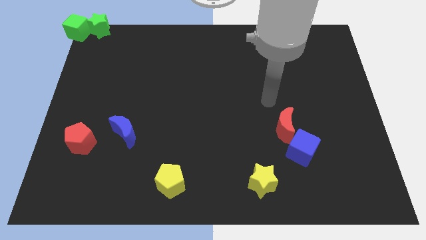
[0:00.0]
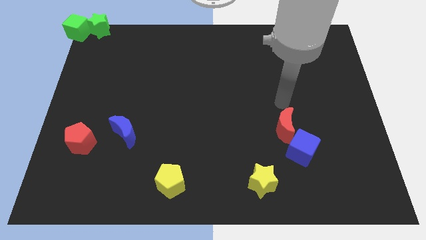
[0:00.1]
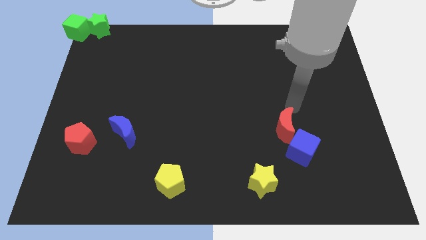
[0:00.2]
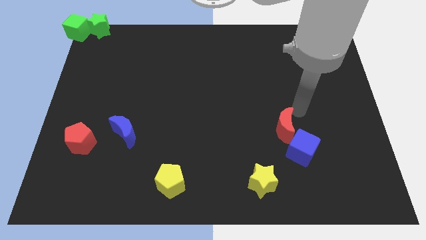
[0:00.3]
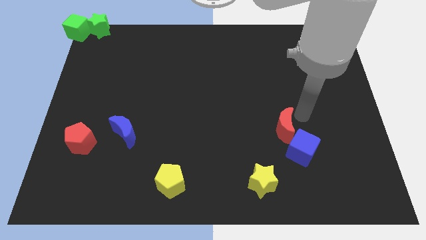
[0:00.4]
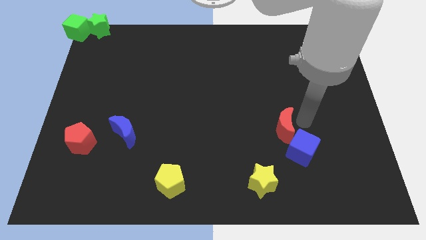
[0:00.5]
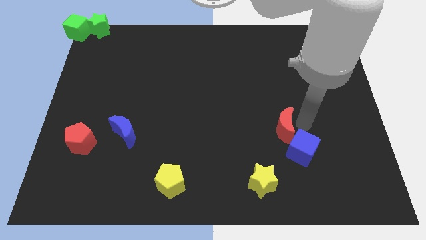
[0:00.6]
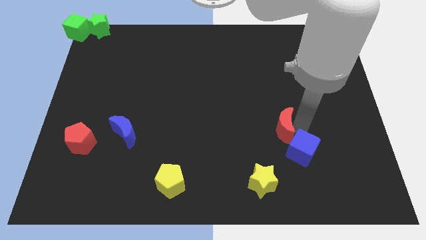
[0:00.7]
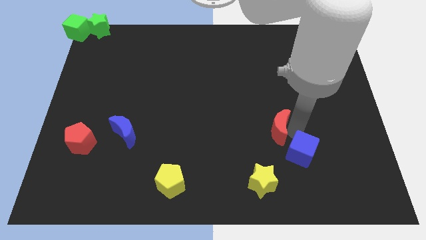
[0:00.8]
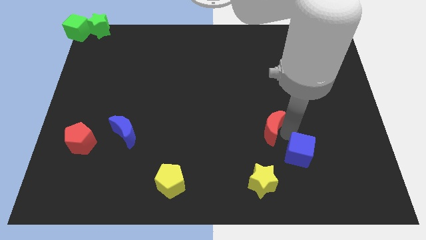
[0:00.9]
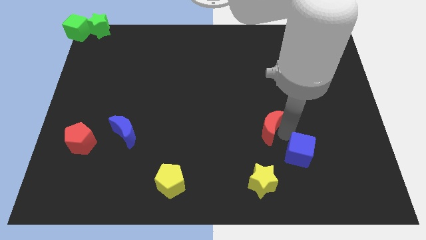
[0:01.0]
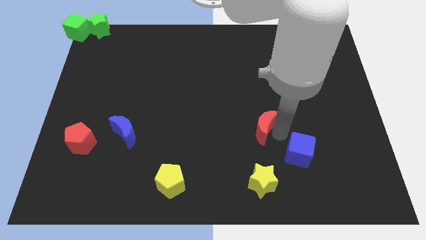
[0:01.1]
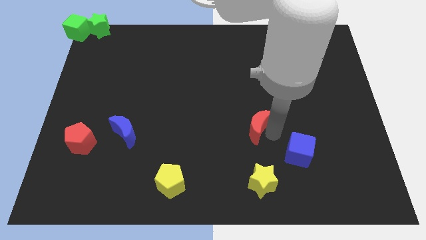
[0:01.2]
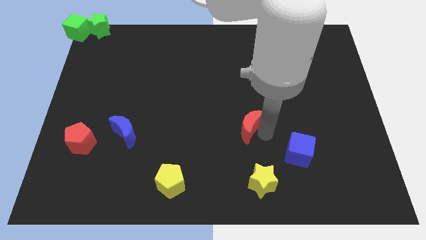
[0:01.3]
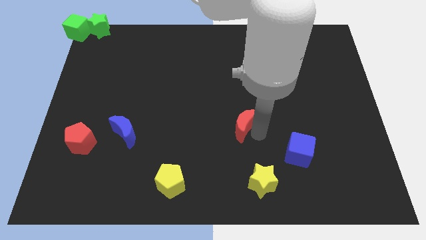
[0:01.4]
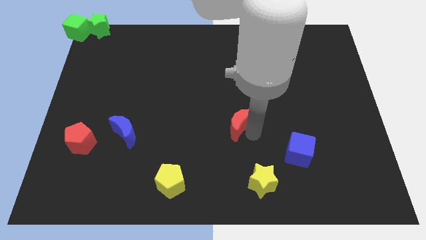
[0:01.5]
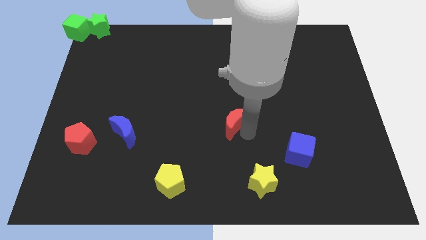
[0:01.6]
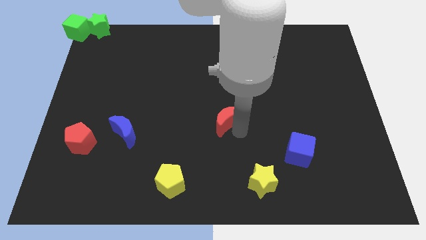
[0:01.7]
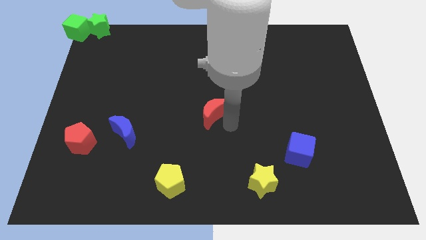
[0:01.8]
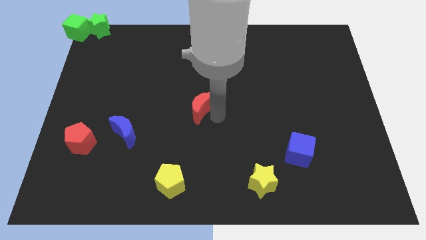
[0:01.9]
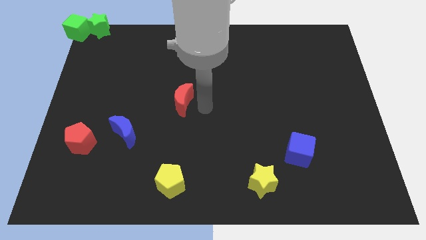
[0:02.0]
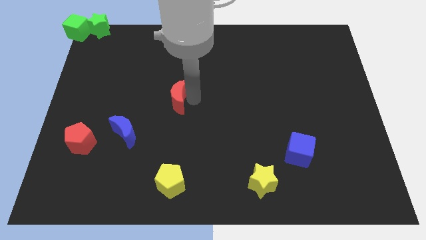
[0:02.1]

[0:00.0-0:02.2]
push the red moon towards the top of the yellow pentagon

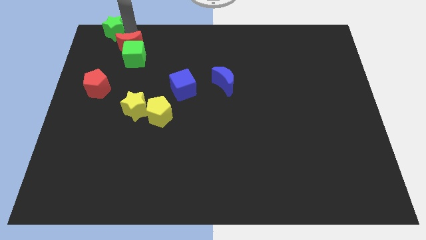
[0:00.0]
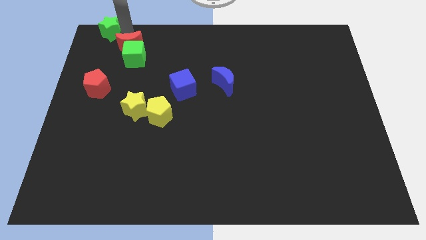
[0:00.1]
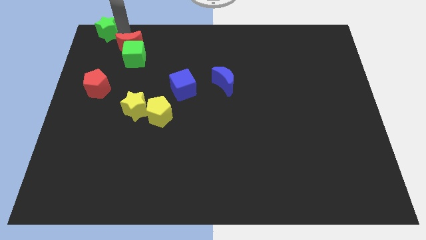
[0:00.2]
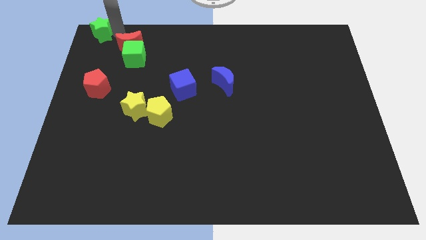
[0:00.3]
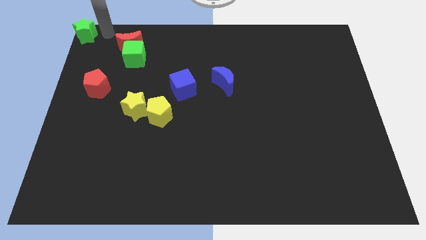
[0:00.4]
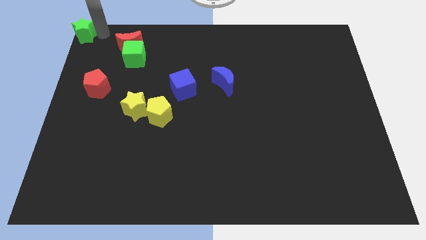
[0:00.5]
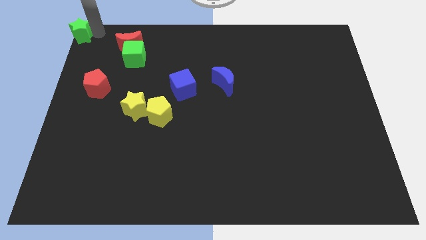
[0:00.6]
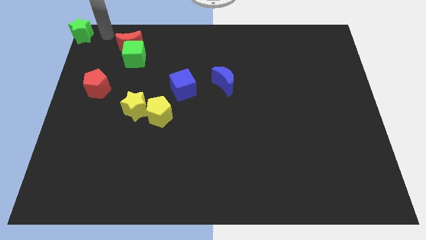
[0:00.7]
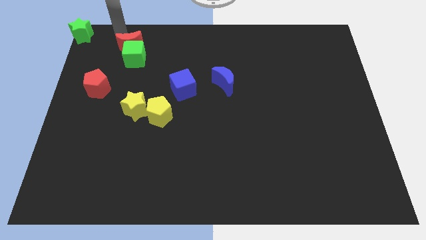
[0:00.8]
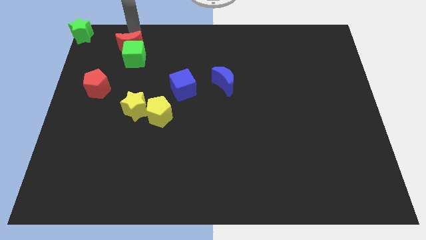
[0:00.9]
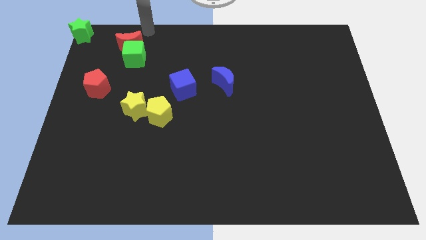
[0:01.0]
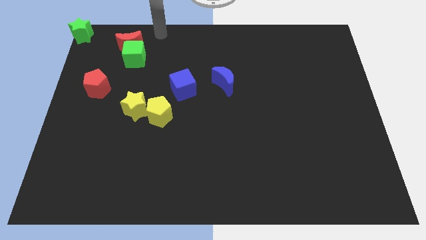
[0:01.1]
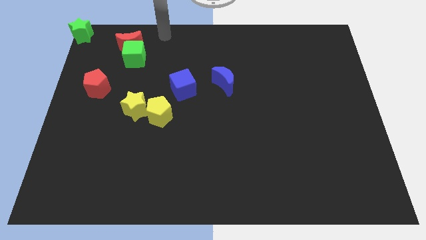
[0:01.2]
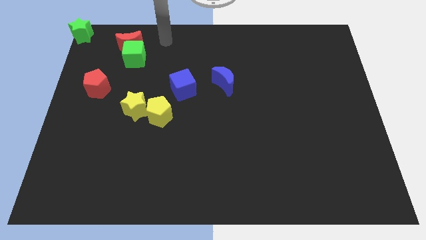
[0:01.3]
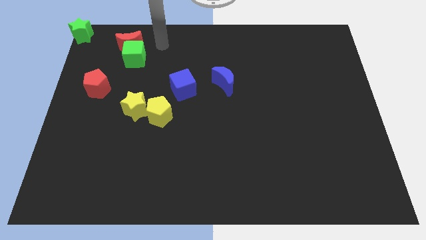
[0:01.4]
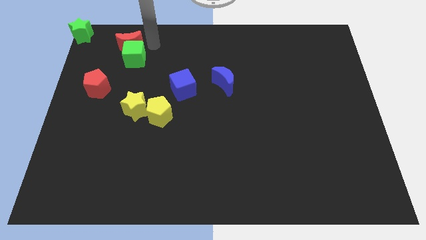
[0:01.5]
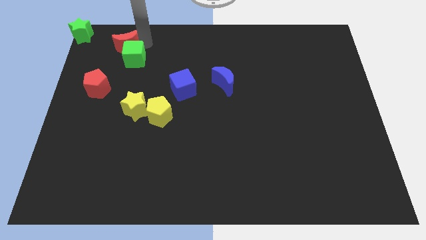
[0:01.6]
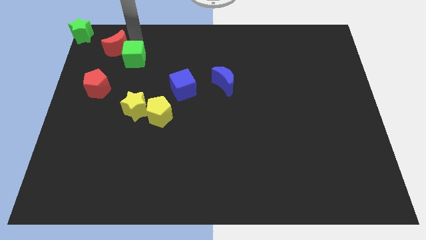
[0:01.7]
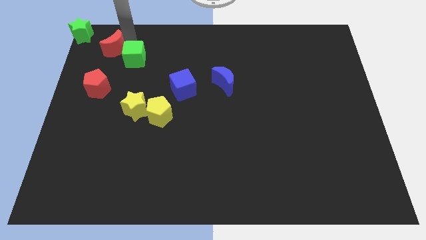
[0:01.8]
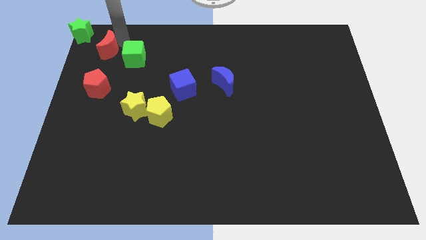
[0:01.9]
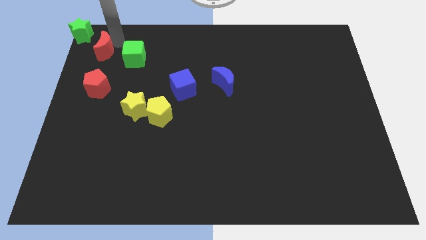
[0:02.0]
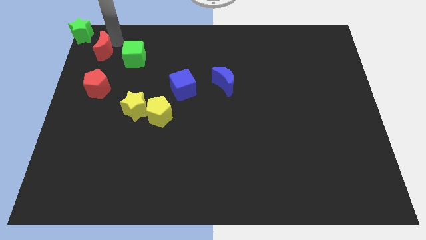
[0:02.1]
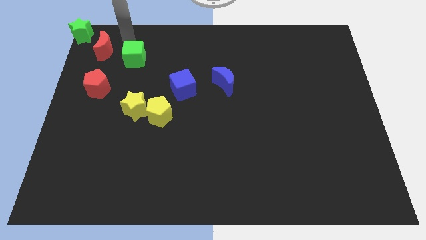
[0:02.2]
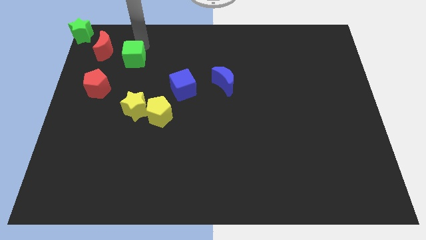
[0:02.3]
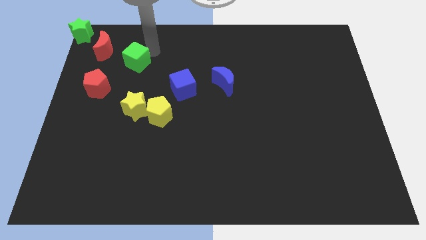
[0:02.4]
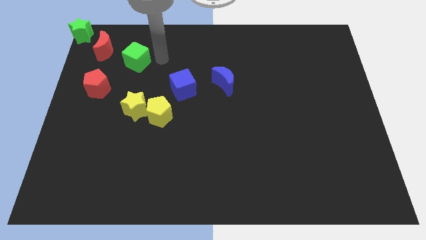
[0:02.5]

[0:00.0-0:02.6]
place the red crescent above the red pentagon

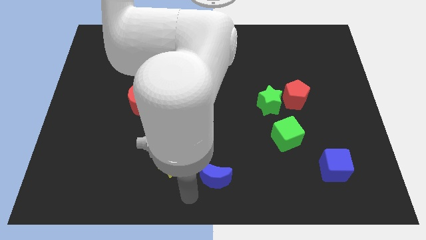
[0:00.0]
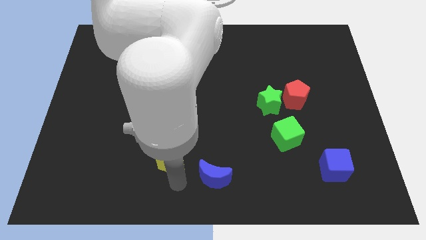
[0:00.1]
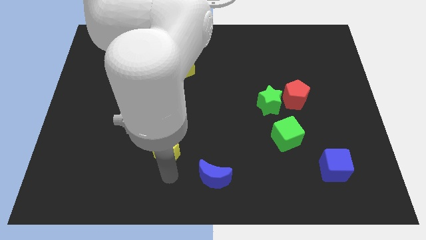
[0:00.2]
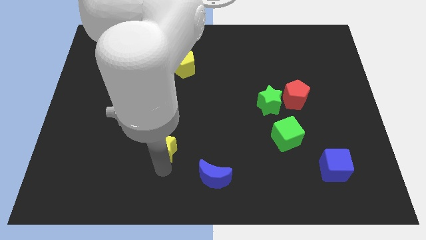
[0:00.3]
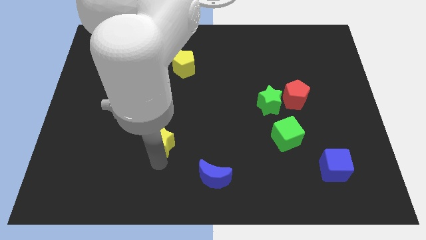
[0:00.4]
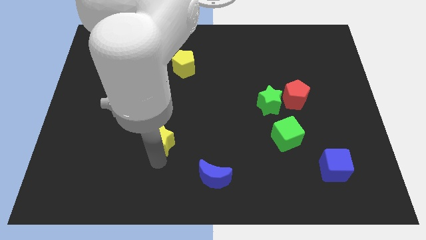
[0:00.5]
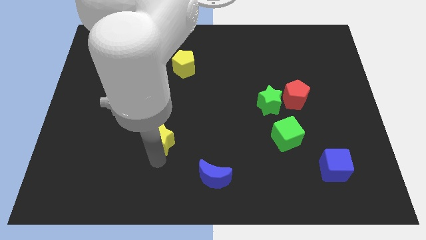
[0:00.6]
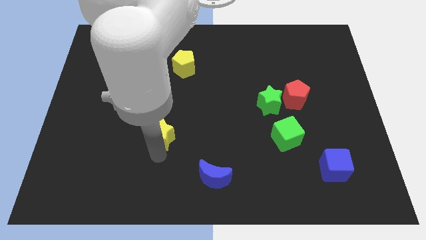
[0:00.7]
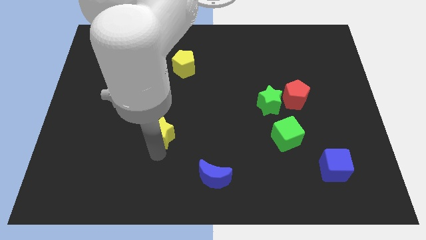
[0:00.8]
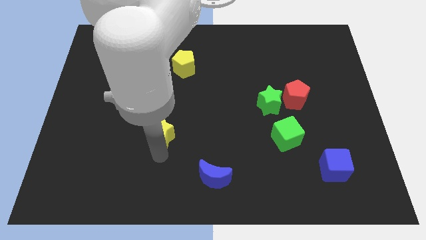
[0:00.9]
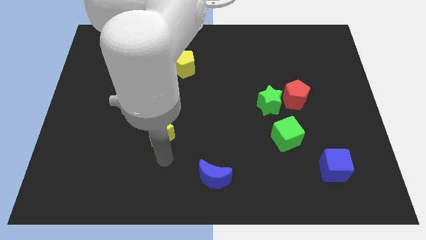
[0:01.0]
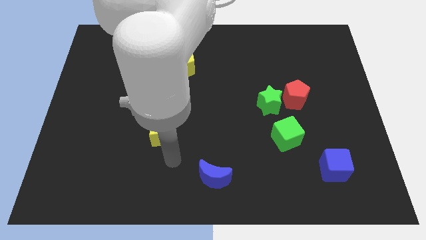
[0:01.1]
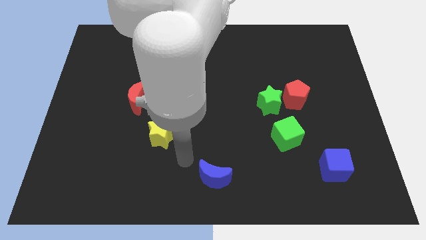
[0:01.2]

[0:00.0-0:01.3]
place the yellow star diagonally bottom right to the red moon

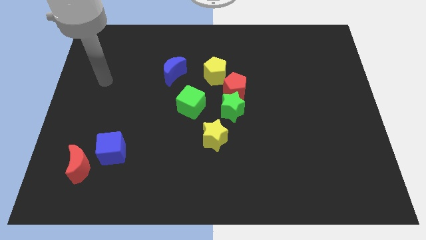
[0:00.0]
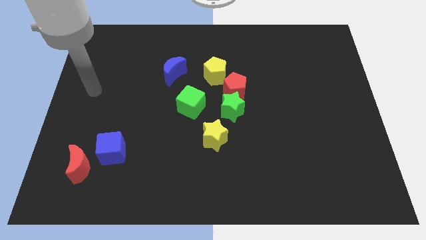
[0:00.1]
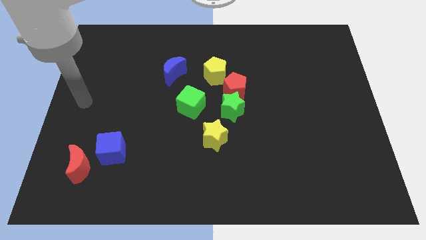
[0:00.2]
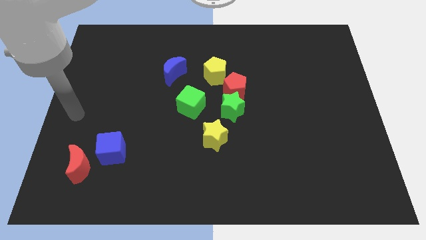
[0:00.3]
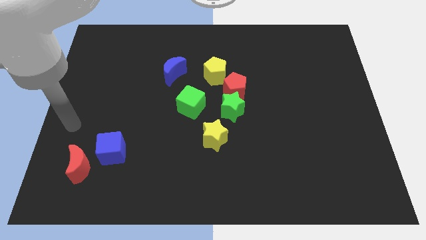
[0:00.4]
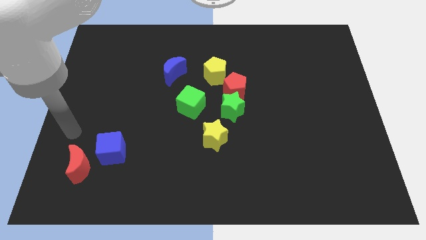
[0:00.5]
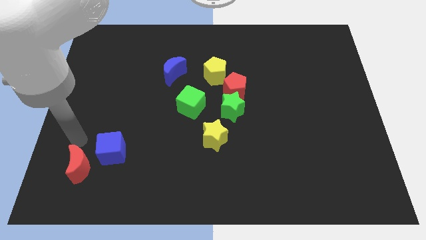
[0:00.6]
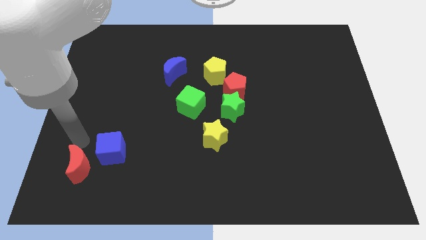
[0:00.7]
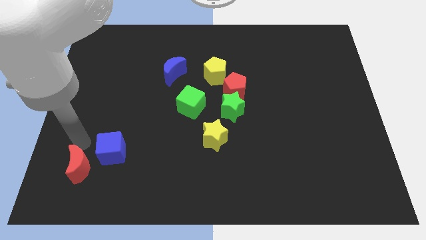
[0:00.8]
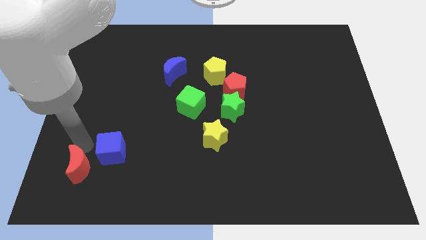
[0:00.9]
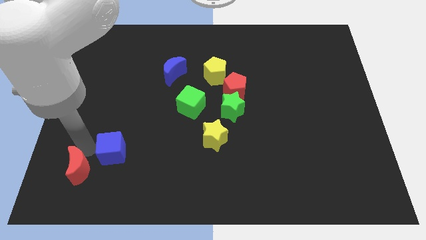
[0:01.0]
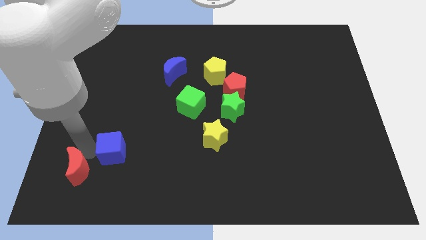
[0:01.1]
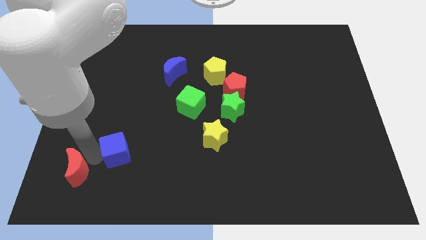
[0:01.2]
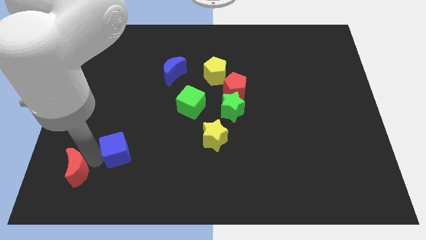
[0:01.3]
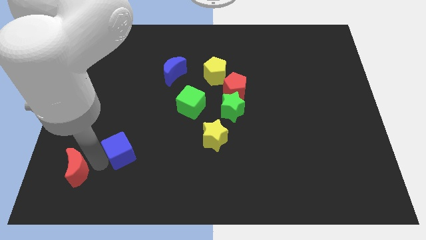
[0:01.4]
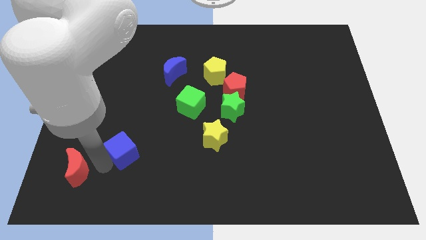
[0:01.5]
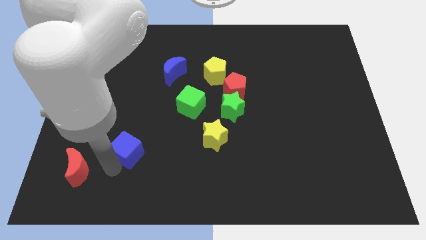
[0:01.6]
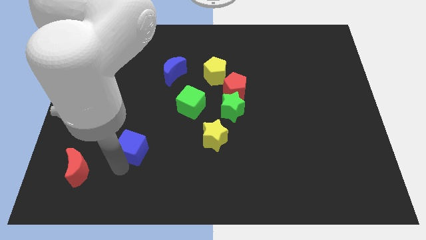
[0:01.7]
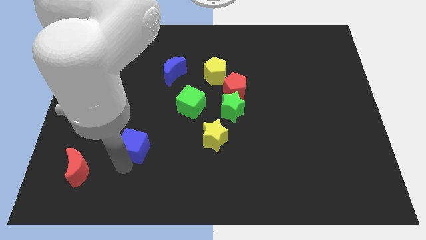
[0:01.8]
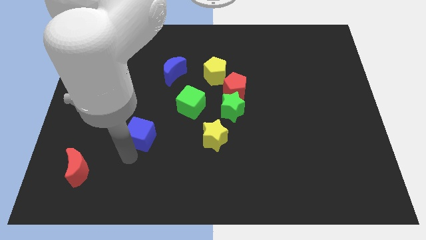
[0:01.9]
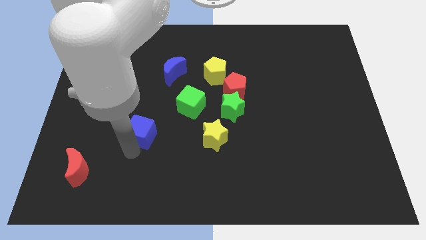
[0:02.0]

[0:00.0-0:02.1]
move the blue cube horizontally left to the yellow star

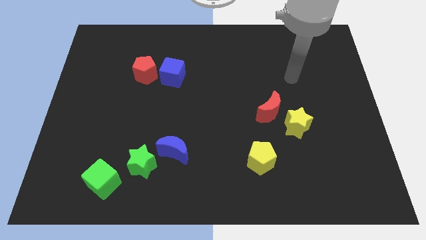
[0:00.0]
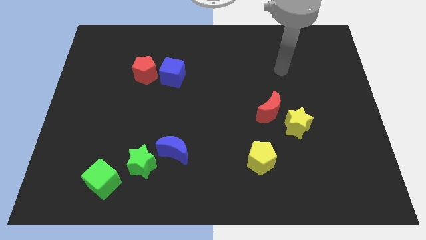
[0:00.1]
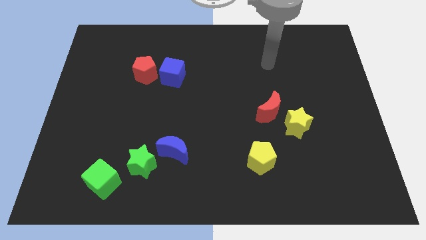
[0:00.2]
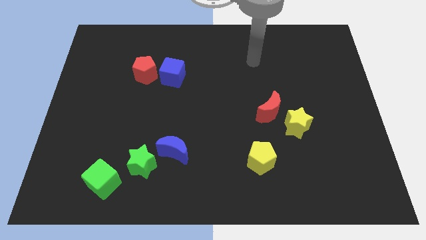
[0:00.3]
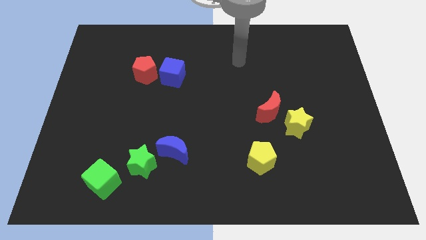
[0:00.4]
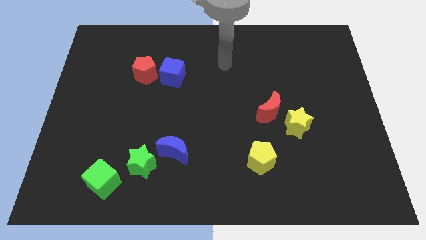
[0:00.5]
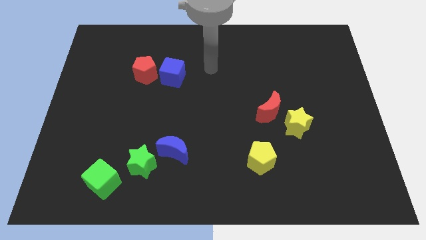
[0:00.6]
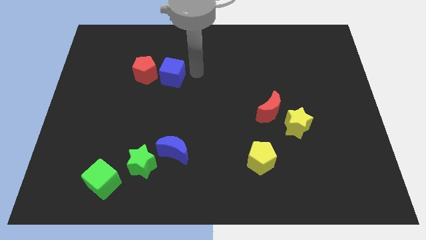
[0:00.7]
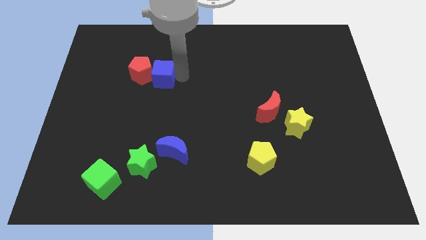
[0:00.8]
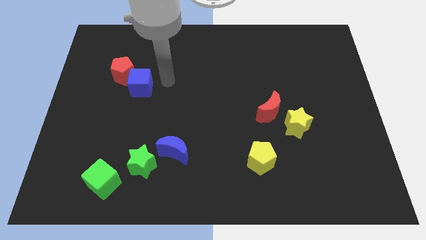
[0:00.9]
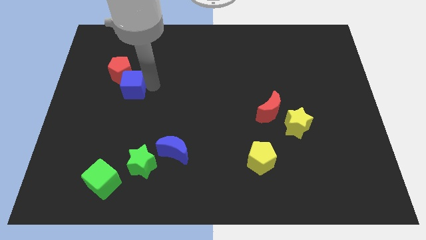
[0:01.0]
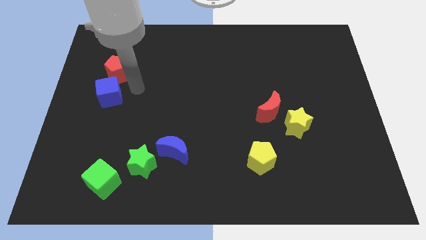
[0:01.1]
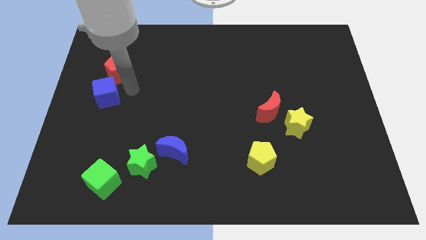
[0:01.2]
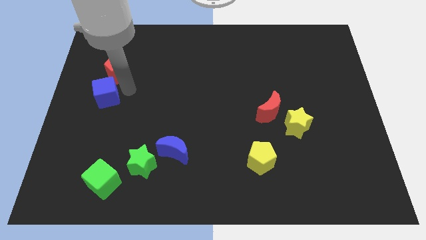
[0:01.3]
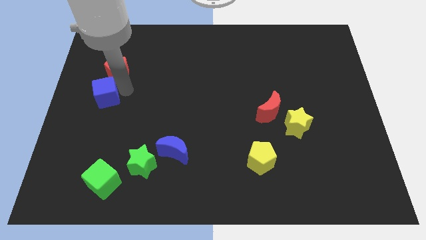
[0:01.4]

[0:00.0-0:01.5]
push the blue cube and red pentagon towards the left side of the board
